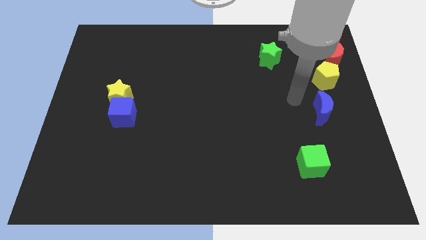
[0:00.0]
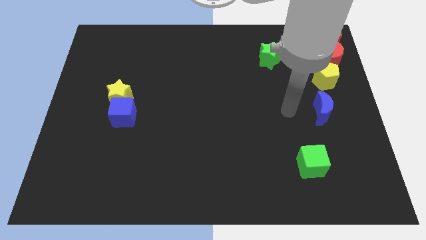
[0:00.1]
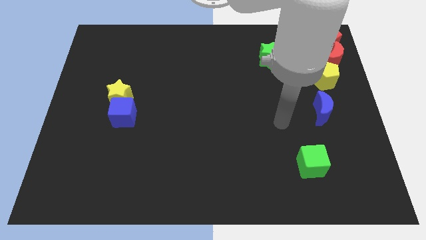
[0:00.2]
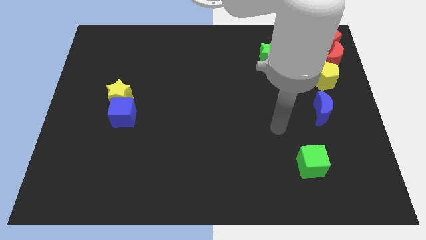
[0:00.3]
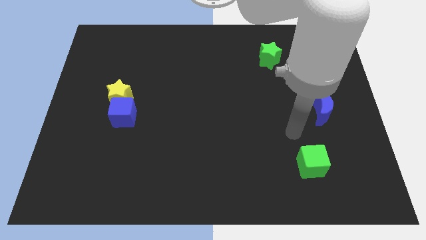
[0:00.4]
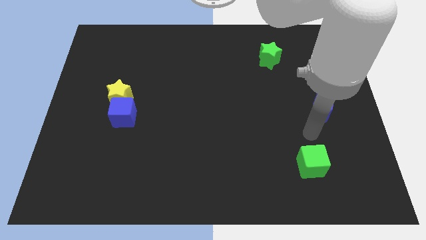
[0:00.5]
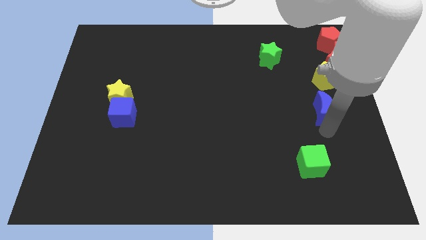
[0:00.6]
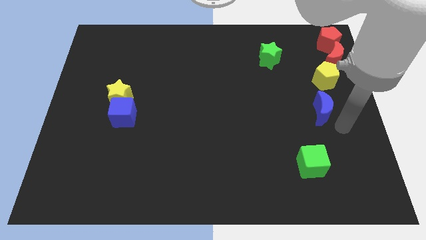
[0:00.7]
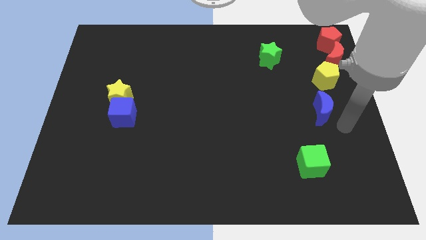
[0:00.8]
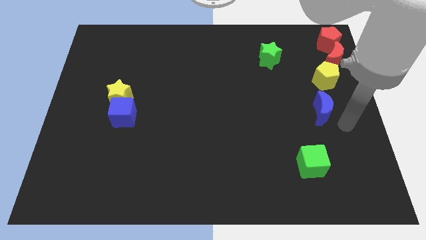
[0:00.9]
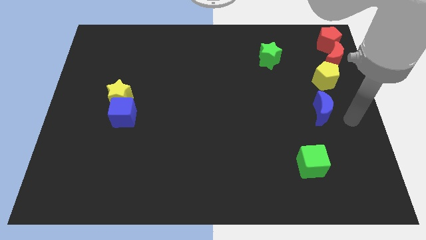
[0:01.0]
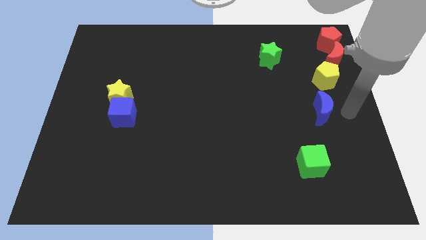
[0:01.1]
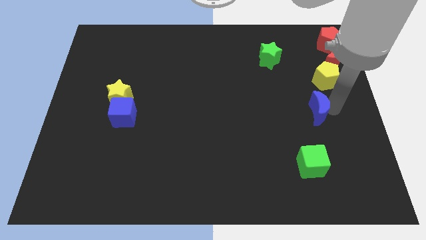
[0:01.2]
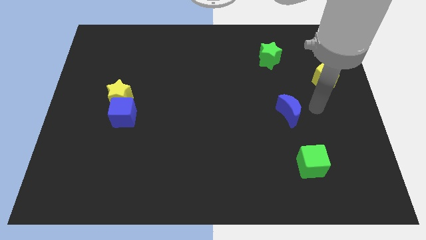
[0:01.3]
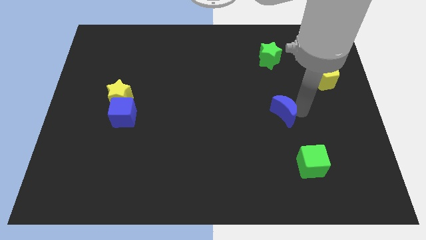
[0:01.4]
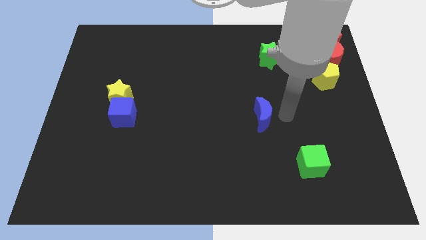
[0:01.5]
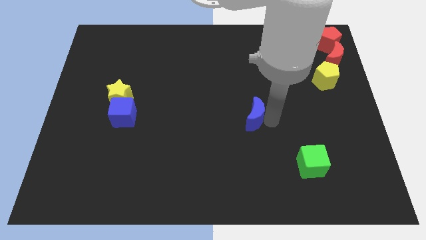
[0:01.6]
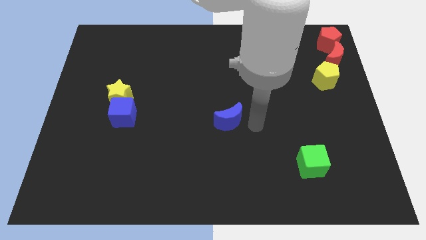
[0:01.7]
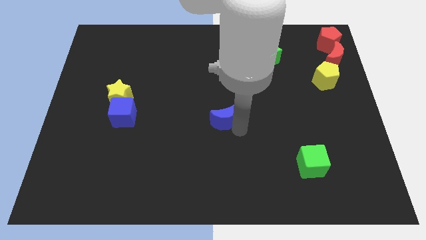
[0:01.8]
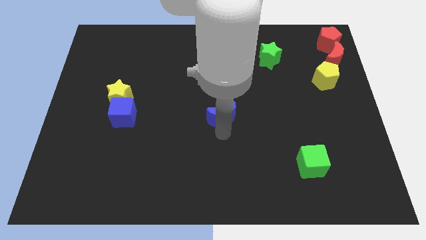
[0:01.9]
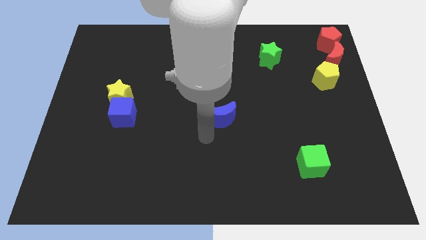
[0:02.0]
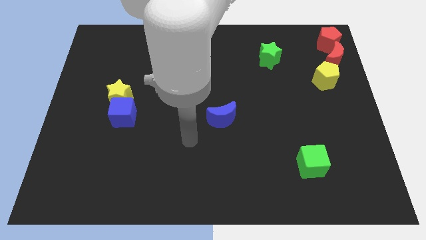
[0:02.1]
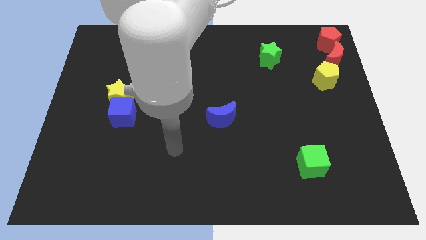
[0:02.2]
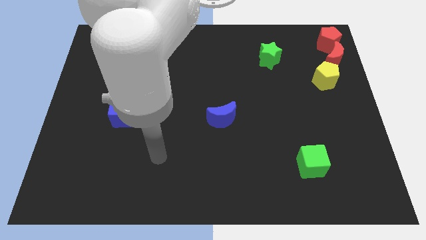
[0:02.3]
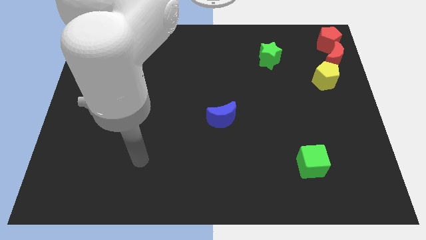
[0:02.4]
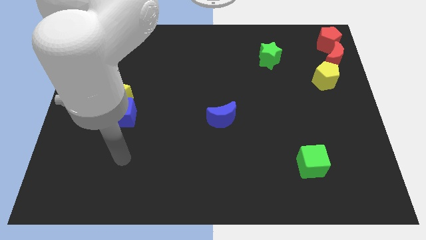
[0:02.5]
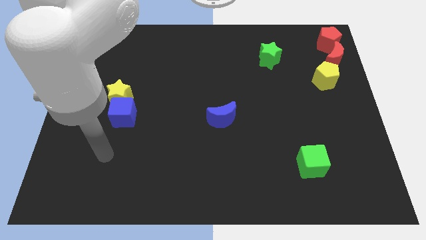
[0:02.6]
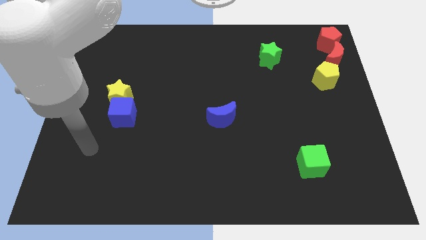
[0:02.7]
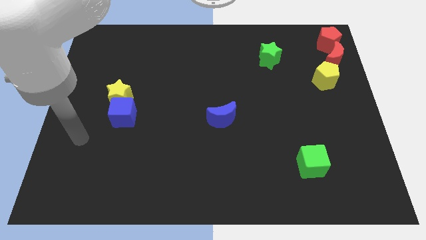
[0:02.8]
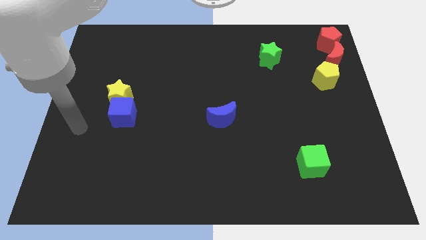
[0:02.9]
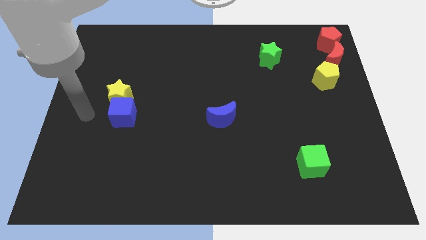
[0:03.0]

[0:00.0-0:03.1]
move the blue crescent to the right of the blue cube

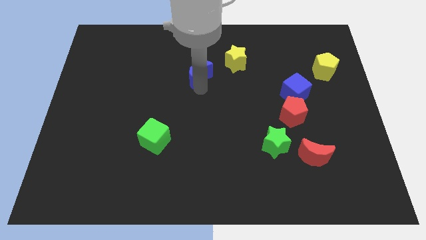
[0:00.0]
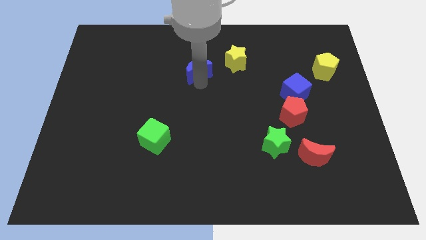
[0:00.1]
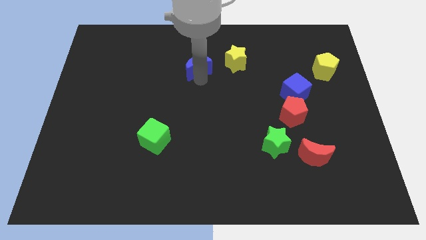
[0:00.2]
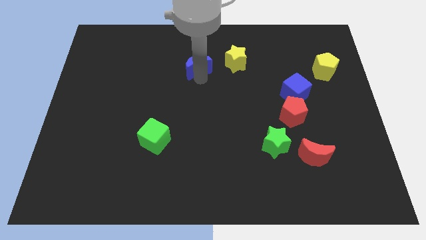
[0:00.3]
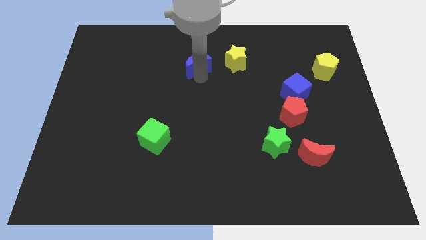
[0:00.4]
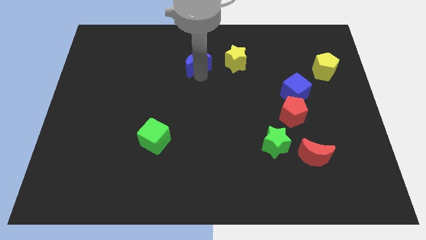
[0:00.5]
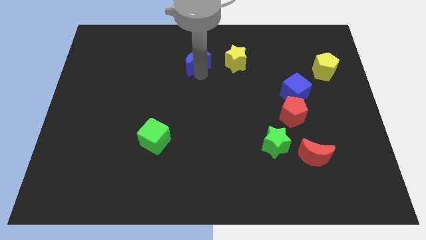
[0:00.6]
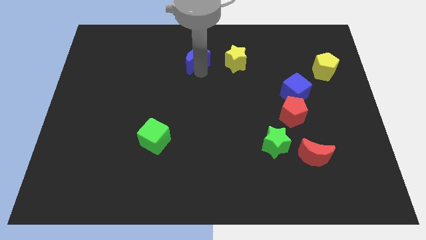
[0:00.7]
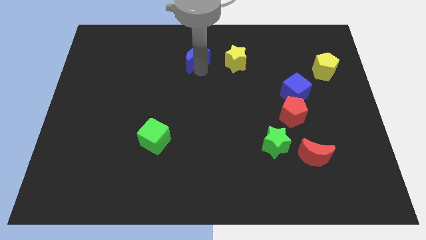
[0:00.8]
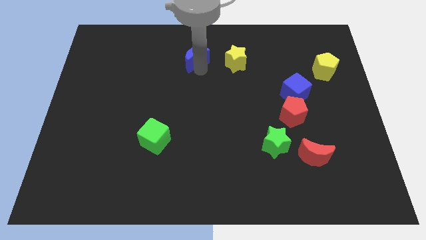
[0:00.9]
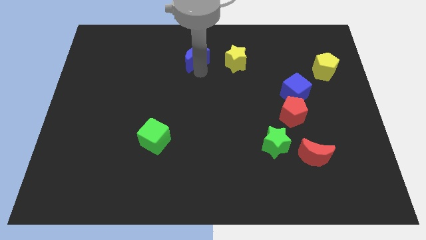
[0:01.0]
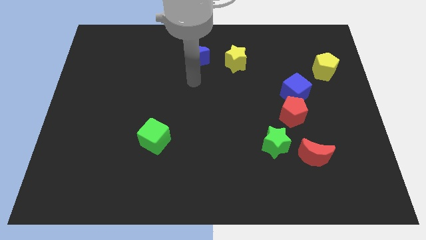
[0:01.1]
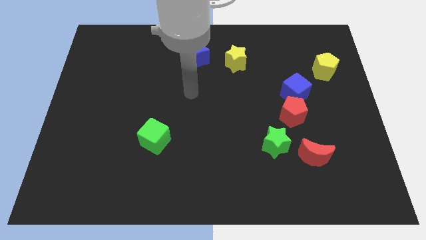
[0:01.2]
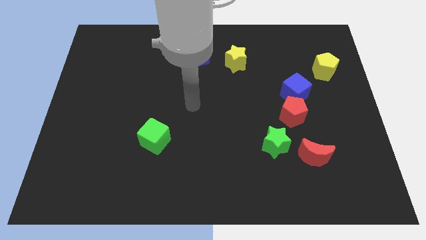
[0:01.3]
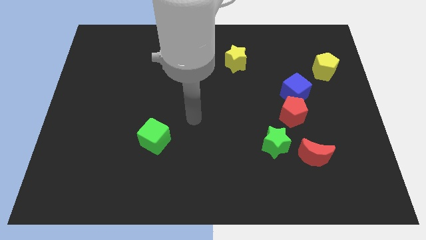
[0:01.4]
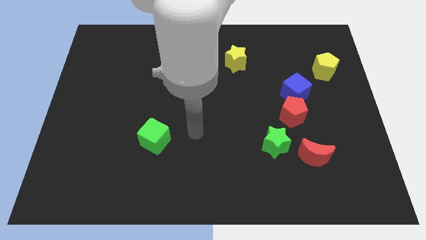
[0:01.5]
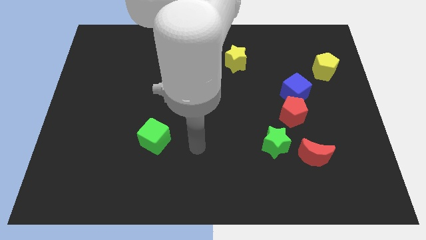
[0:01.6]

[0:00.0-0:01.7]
place the blue moon left to yellow star

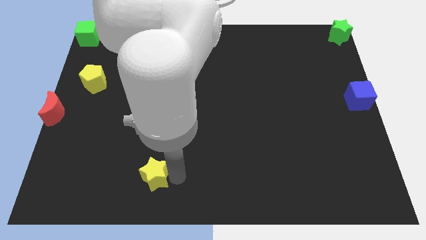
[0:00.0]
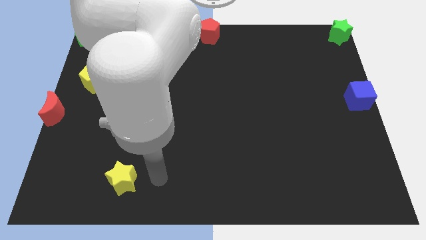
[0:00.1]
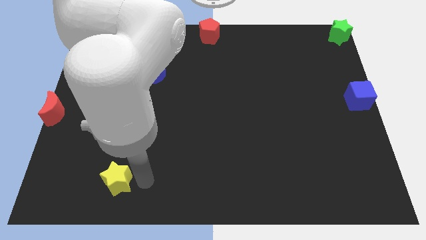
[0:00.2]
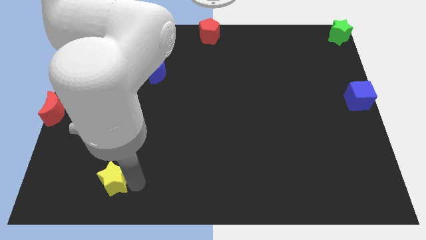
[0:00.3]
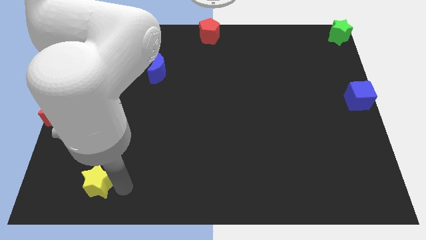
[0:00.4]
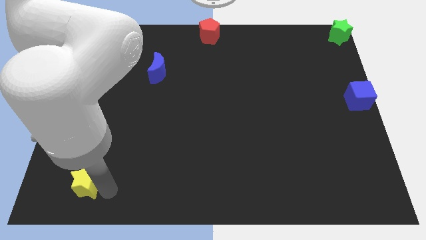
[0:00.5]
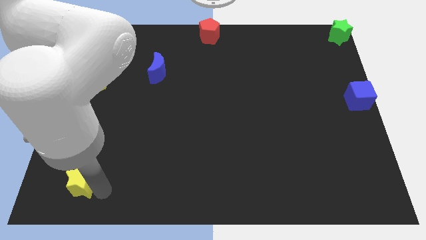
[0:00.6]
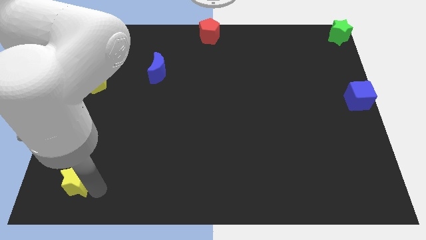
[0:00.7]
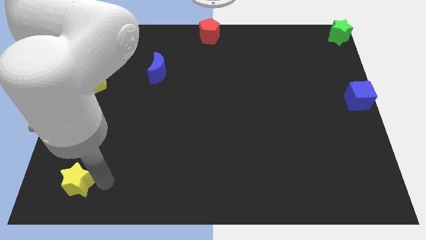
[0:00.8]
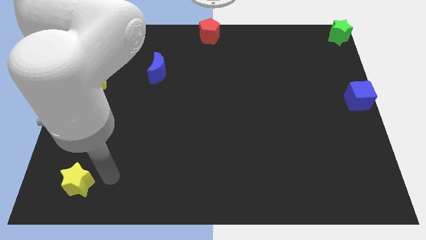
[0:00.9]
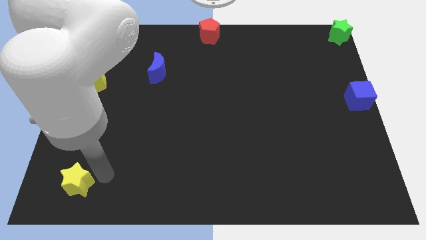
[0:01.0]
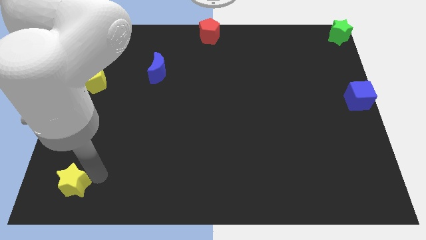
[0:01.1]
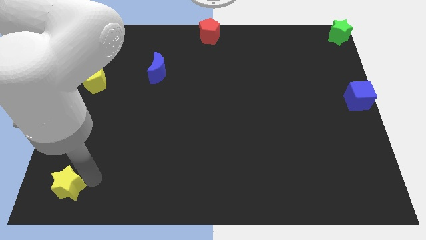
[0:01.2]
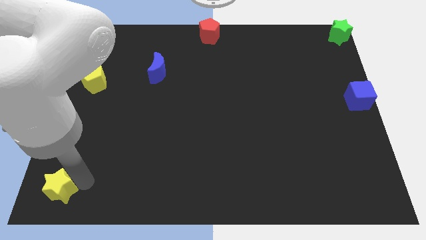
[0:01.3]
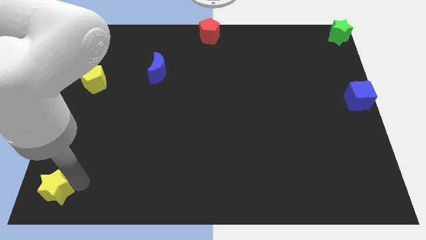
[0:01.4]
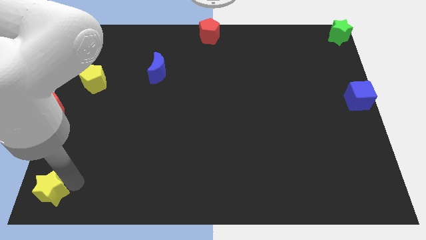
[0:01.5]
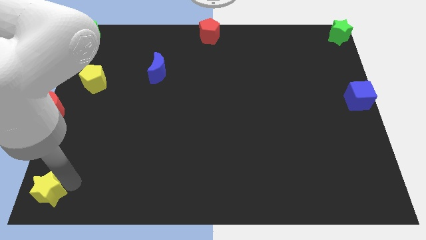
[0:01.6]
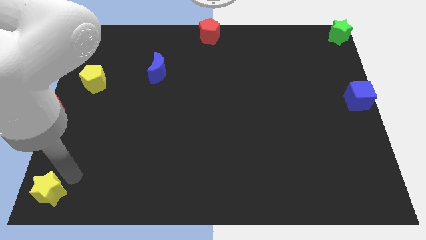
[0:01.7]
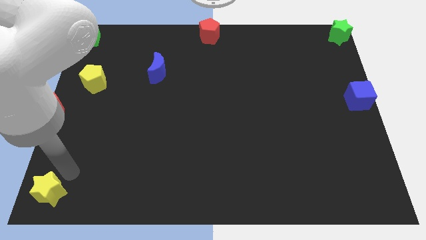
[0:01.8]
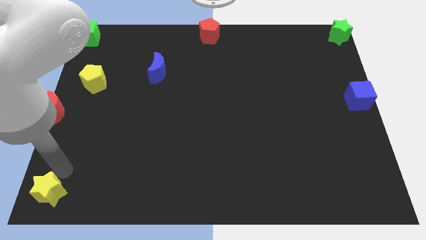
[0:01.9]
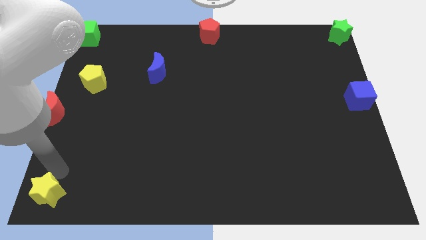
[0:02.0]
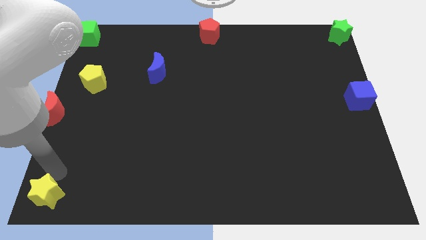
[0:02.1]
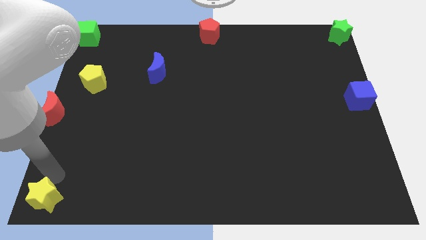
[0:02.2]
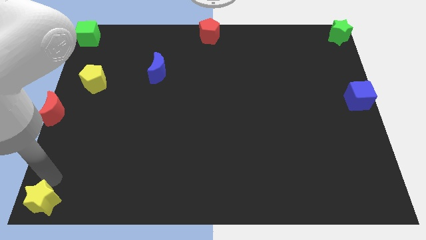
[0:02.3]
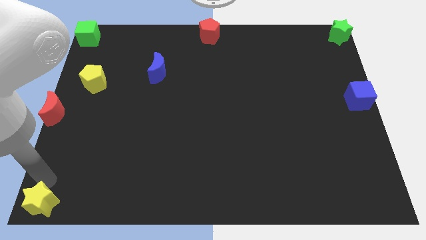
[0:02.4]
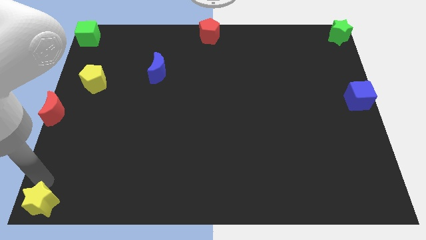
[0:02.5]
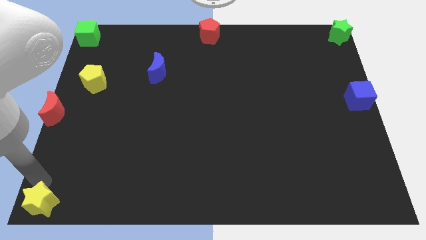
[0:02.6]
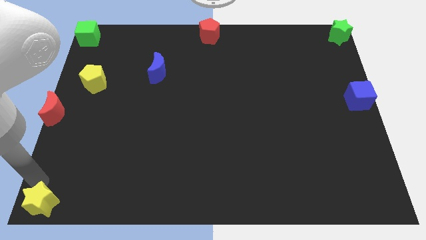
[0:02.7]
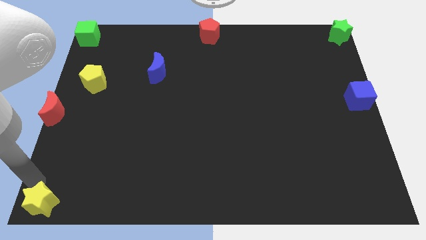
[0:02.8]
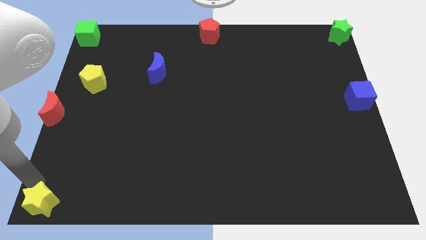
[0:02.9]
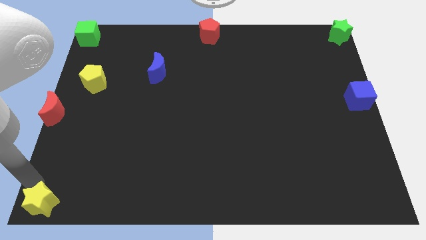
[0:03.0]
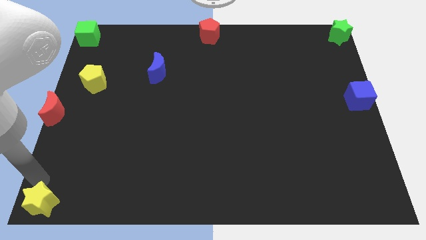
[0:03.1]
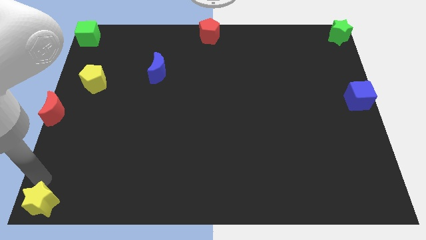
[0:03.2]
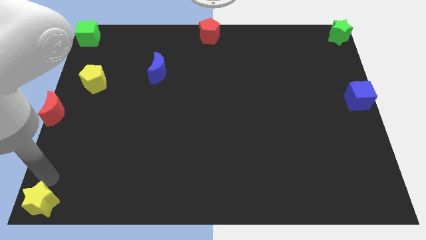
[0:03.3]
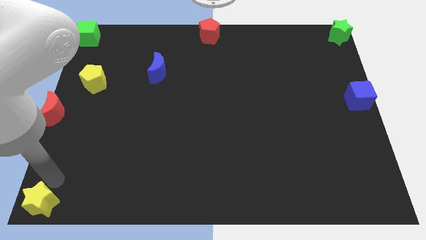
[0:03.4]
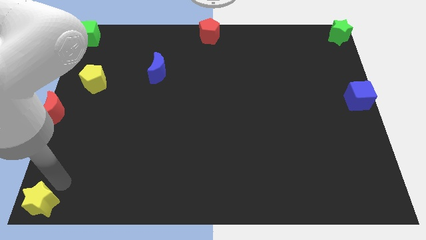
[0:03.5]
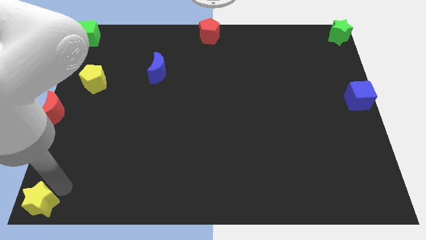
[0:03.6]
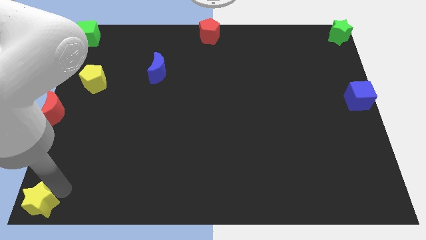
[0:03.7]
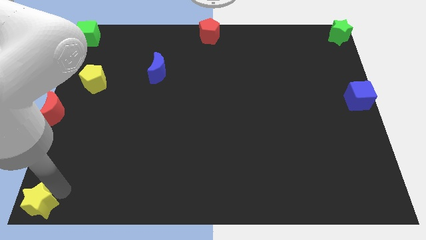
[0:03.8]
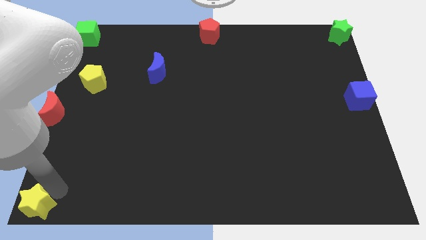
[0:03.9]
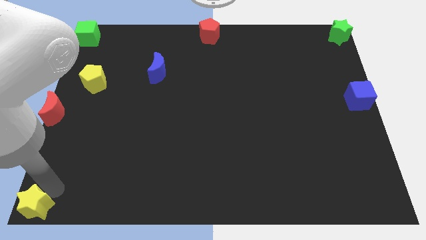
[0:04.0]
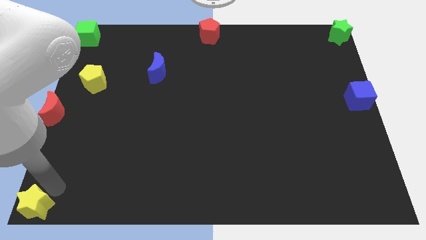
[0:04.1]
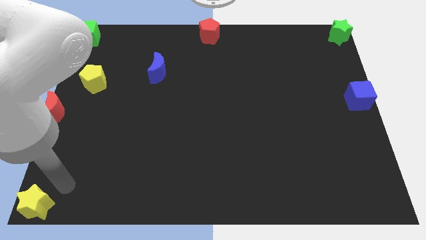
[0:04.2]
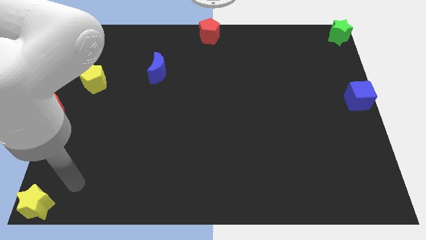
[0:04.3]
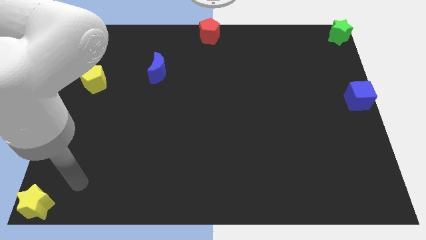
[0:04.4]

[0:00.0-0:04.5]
place the yellow star at the bottom left corner of the board
